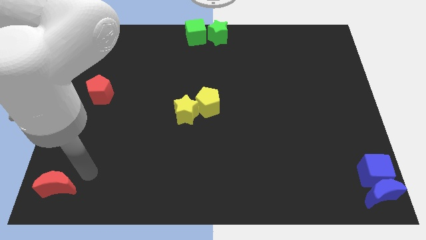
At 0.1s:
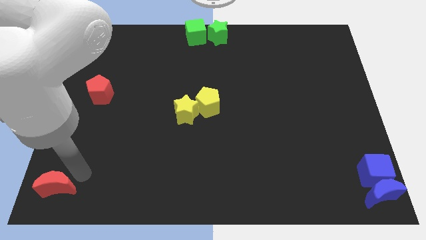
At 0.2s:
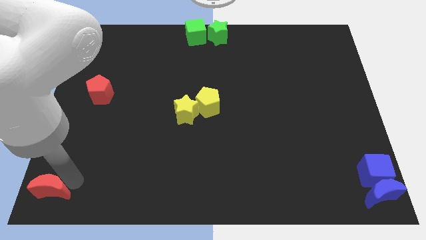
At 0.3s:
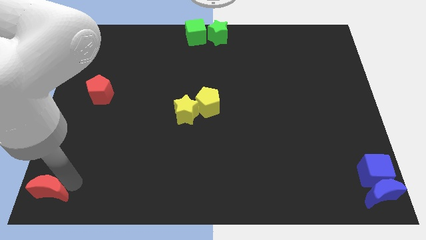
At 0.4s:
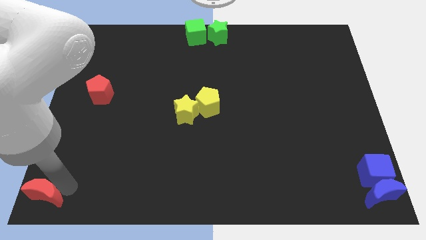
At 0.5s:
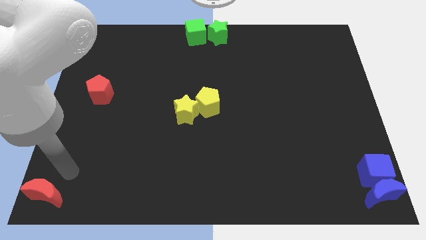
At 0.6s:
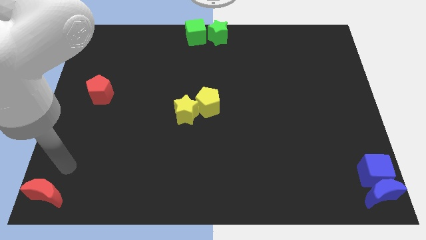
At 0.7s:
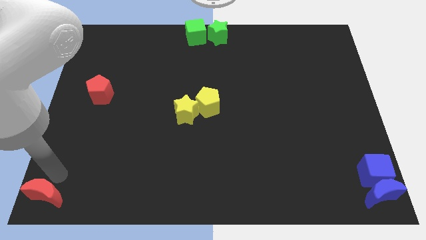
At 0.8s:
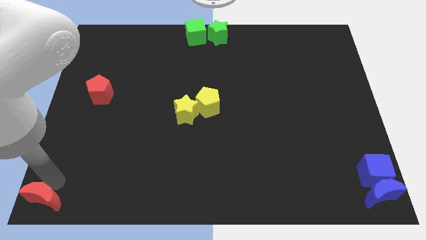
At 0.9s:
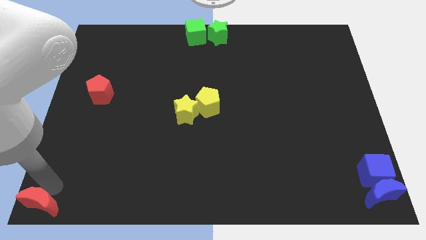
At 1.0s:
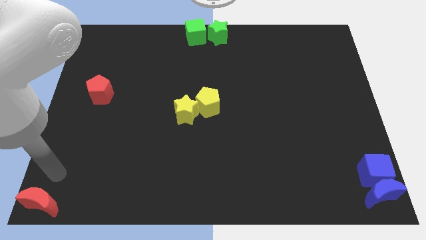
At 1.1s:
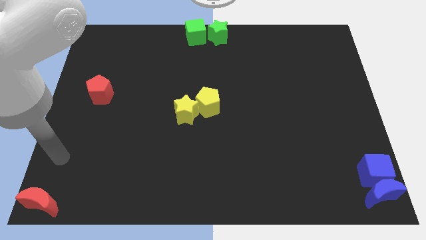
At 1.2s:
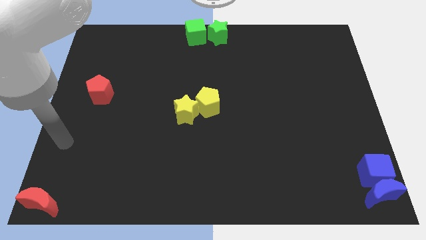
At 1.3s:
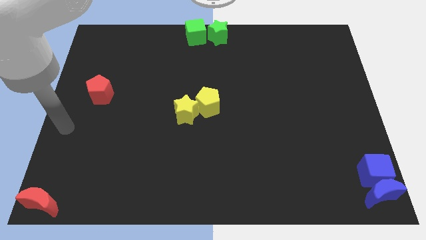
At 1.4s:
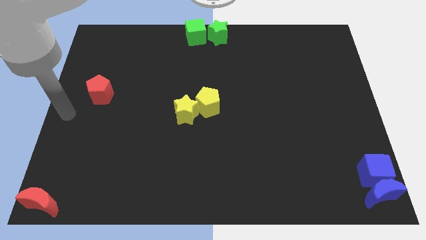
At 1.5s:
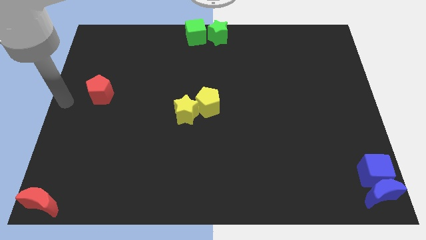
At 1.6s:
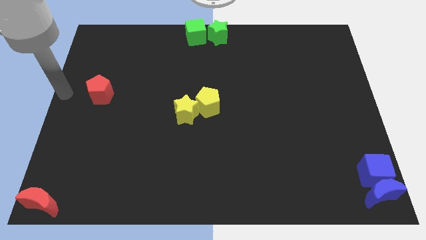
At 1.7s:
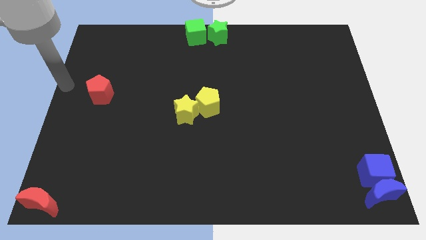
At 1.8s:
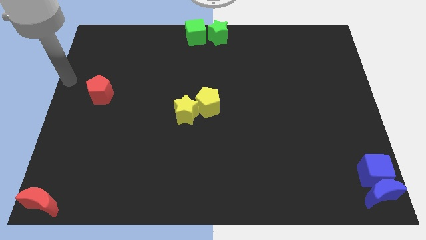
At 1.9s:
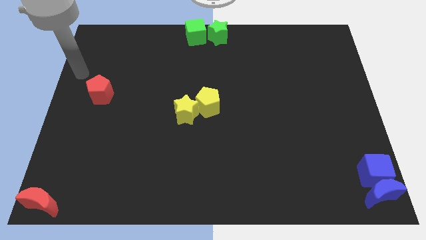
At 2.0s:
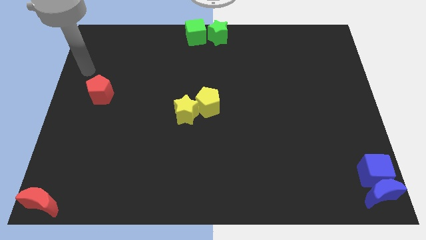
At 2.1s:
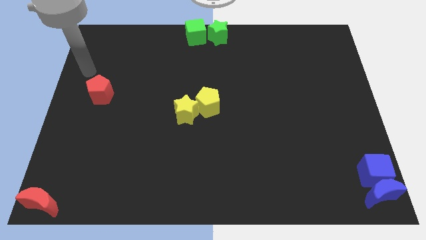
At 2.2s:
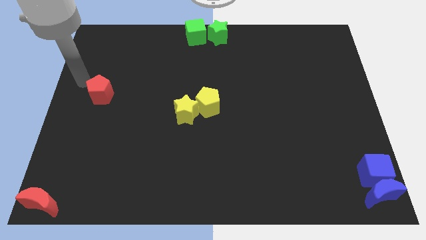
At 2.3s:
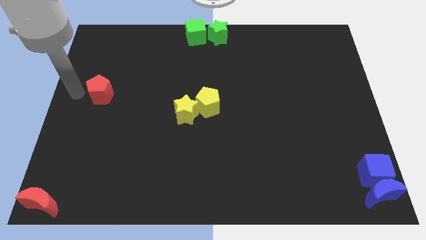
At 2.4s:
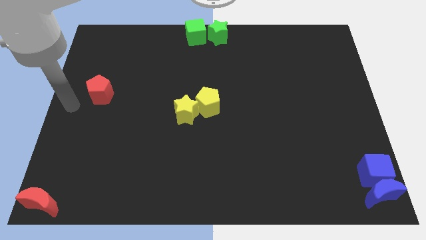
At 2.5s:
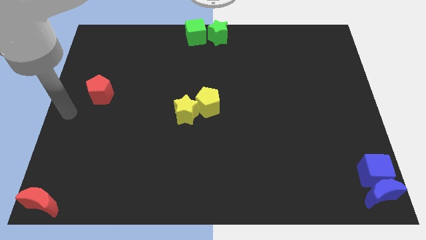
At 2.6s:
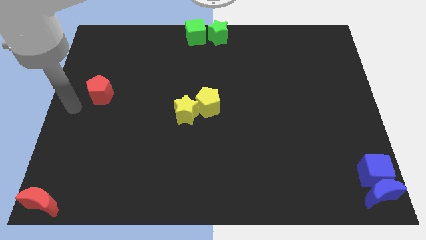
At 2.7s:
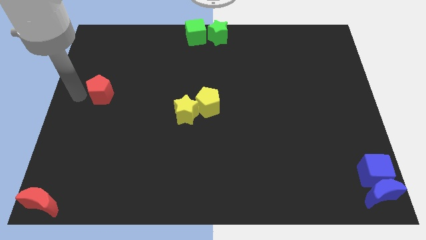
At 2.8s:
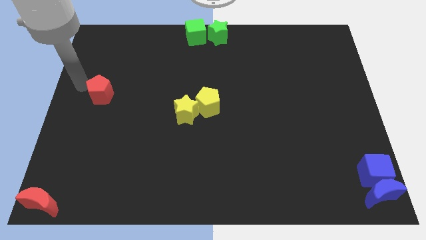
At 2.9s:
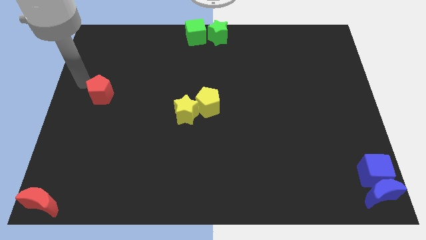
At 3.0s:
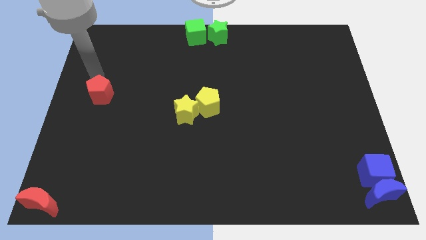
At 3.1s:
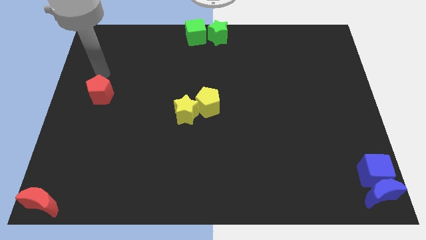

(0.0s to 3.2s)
move your arm on top of the red pentagon

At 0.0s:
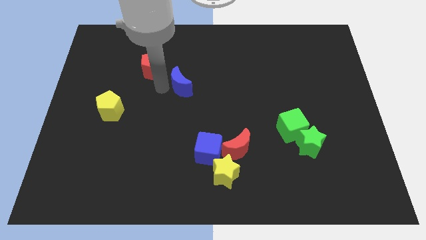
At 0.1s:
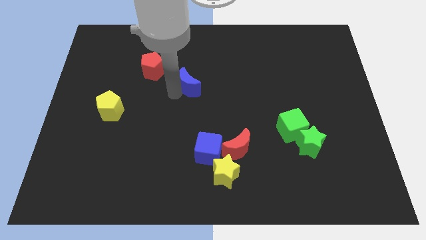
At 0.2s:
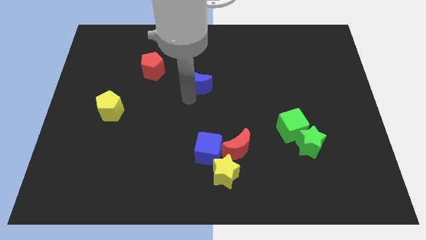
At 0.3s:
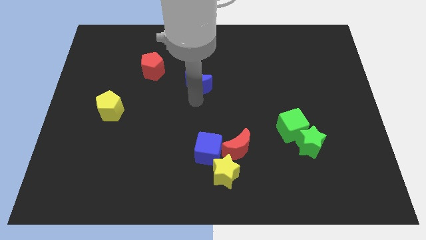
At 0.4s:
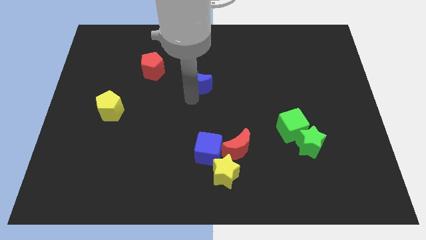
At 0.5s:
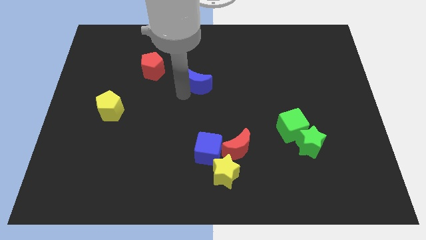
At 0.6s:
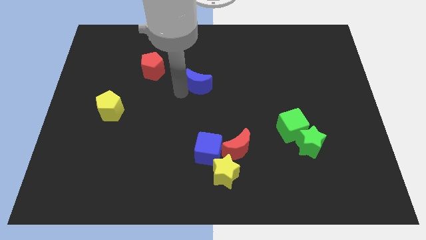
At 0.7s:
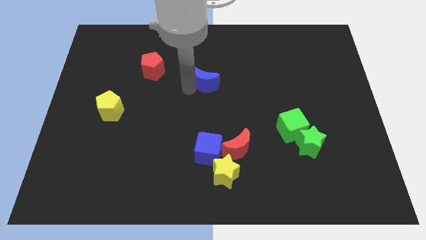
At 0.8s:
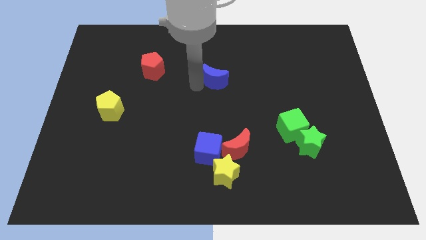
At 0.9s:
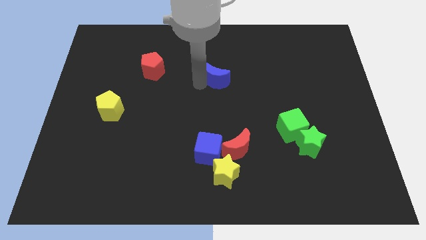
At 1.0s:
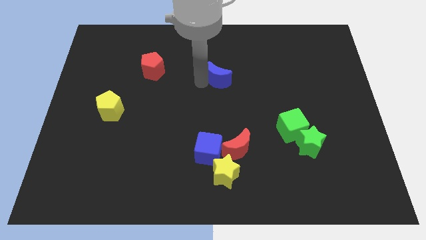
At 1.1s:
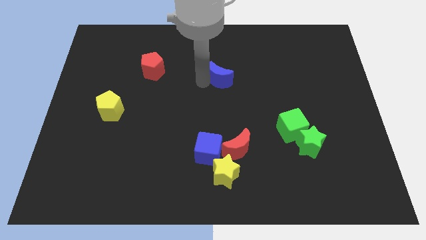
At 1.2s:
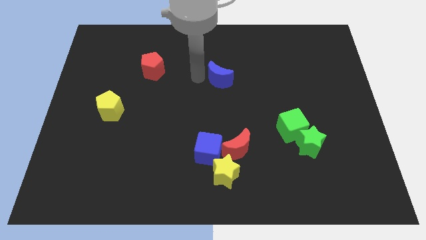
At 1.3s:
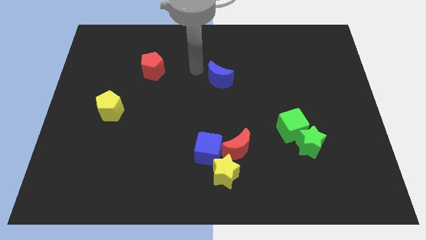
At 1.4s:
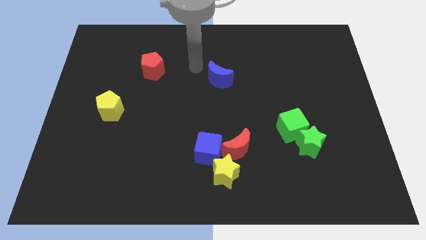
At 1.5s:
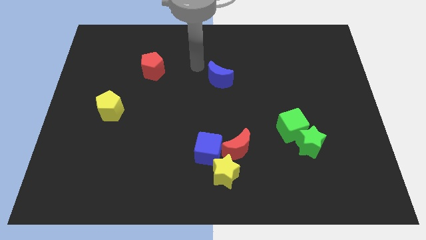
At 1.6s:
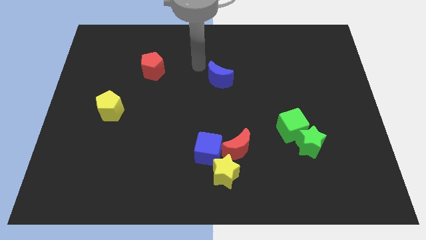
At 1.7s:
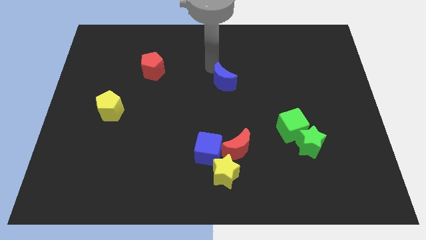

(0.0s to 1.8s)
place the blue moon diagonally top right to the blue cube

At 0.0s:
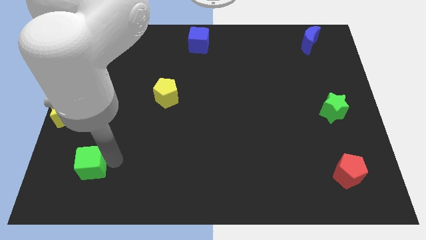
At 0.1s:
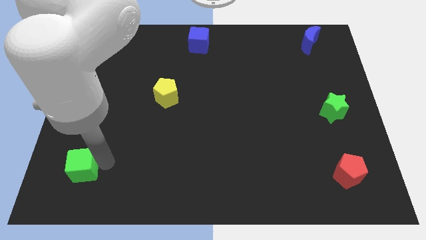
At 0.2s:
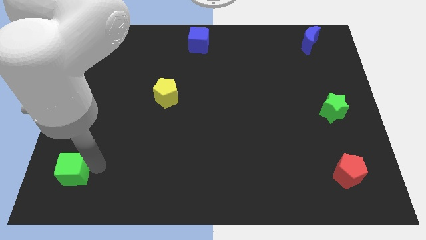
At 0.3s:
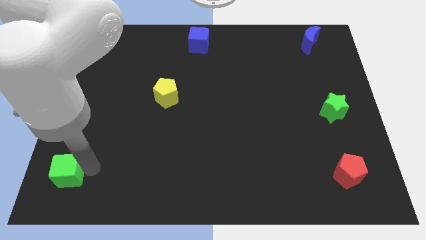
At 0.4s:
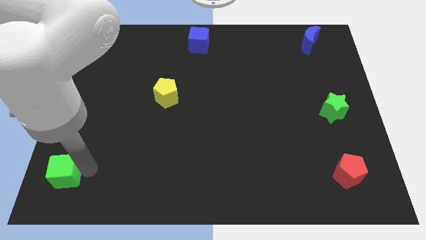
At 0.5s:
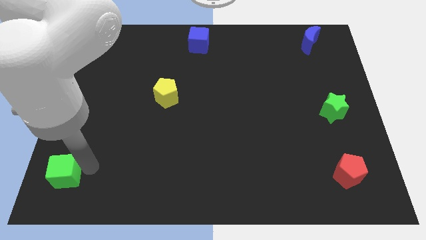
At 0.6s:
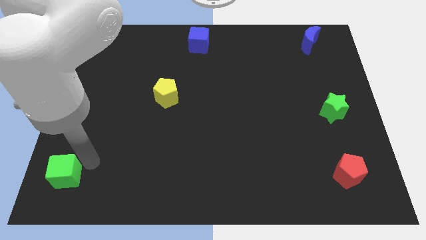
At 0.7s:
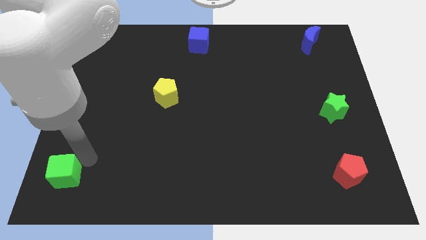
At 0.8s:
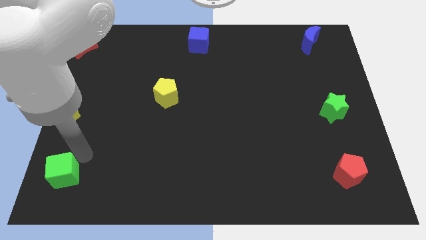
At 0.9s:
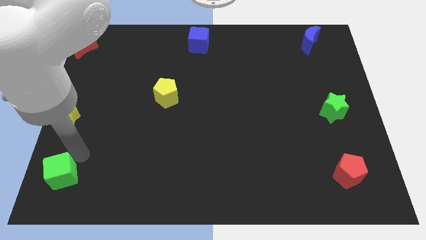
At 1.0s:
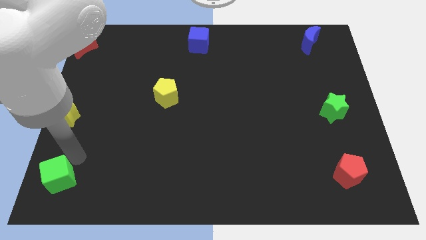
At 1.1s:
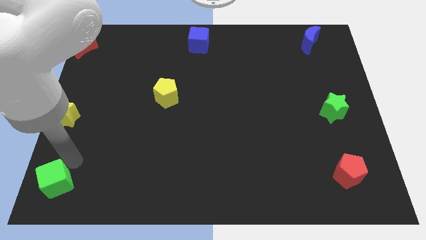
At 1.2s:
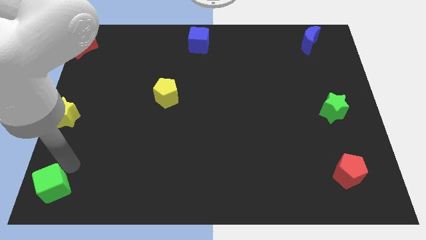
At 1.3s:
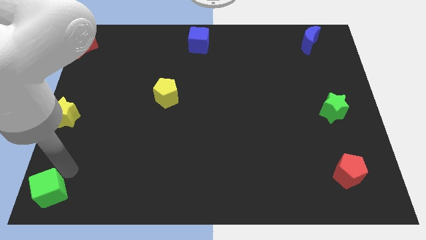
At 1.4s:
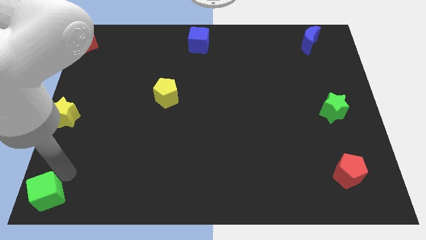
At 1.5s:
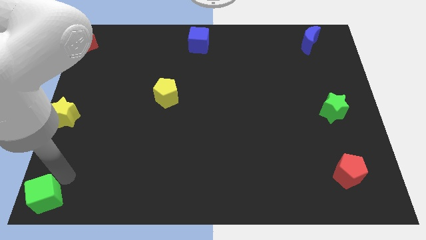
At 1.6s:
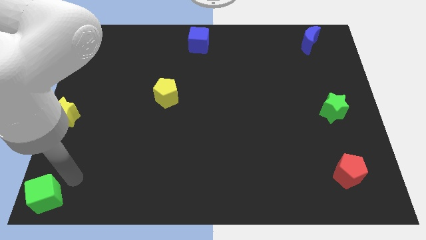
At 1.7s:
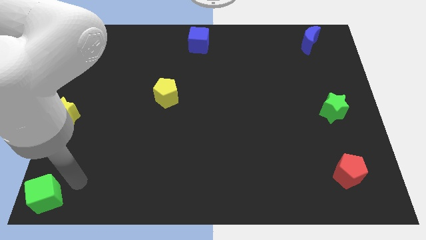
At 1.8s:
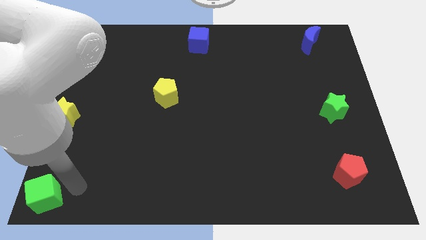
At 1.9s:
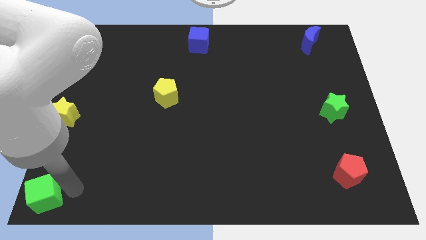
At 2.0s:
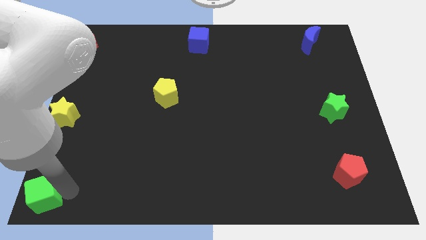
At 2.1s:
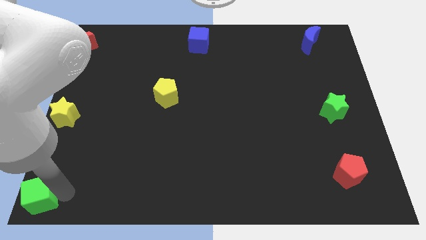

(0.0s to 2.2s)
push the green cube bottom left of the board

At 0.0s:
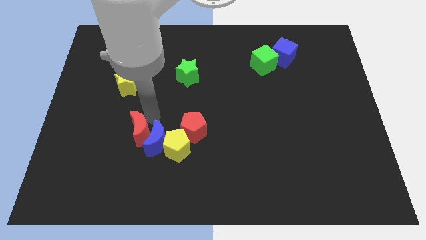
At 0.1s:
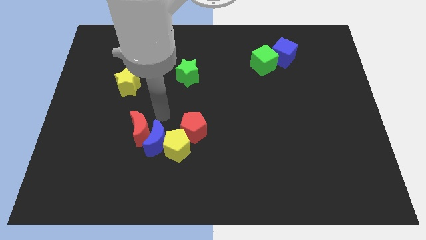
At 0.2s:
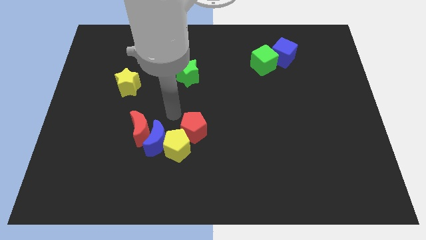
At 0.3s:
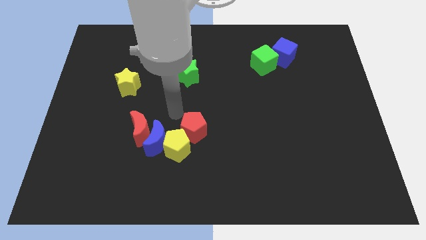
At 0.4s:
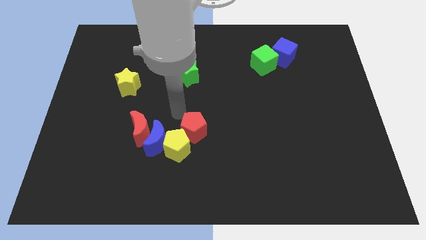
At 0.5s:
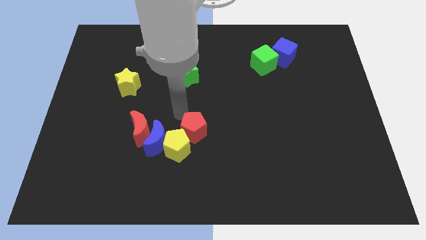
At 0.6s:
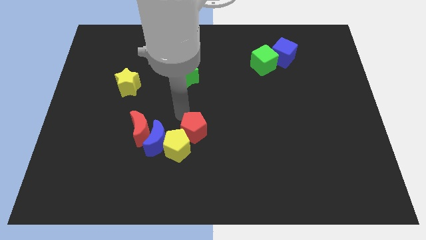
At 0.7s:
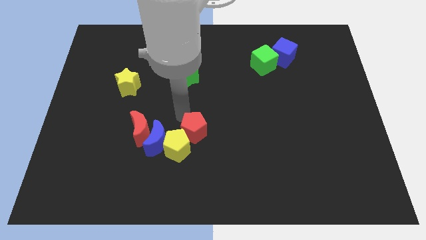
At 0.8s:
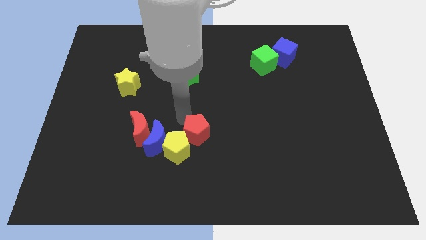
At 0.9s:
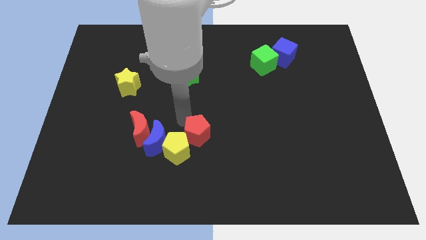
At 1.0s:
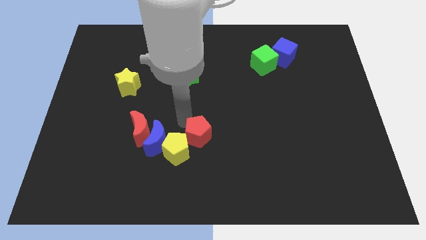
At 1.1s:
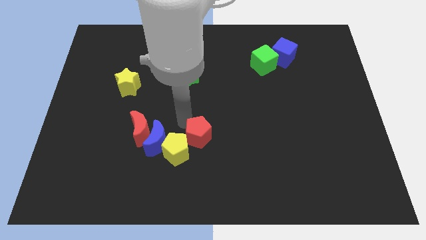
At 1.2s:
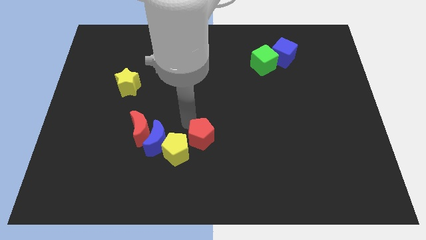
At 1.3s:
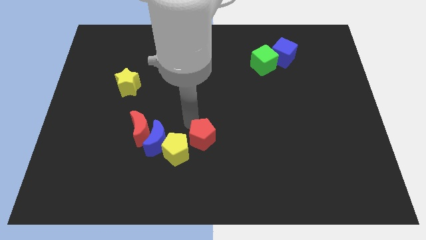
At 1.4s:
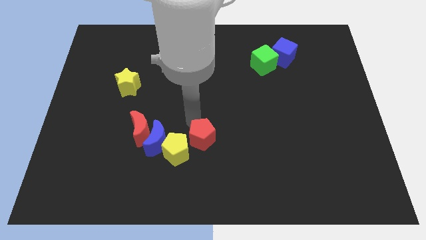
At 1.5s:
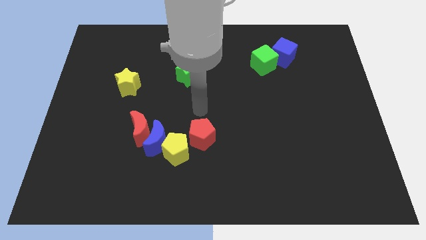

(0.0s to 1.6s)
separate red pentagon from yellow pentagon

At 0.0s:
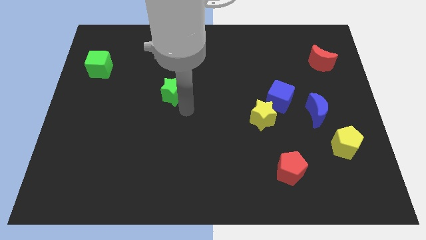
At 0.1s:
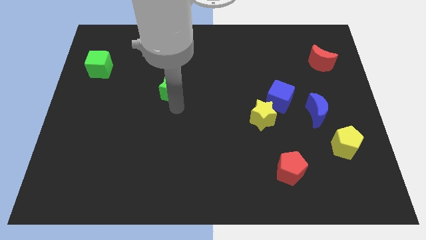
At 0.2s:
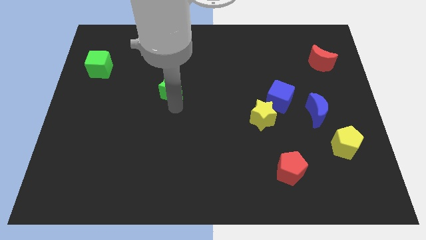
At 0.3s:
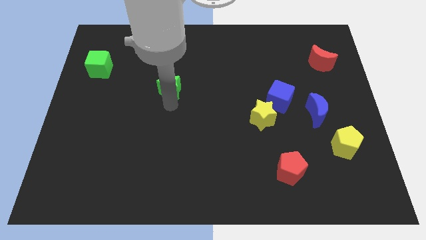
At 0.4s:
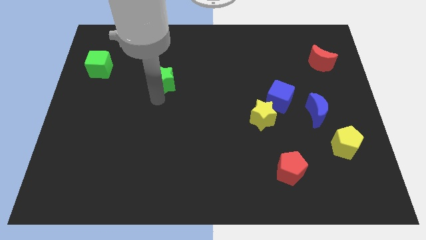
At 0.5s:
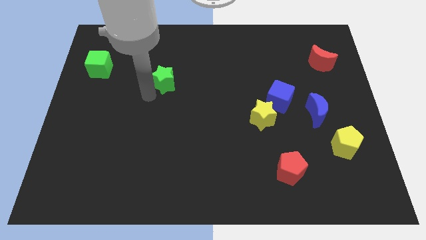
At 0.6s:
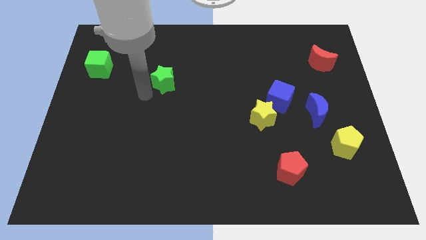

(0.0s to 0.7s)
move green star slightly up
